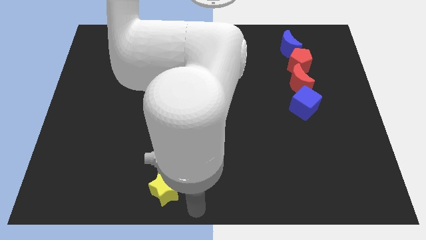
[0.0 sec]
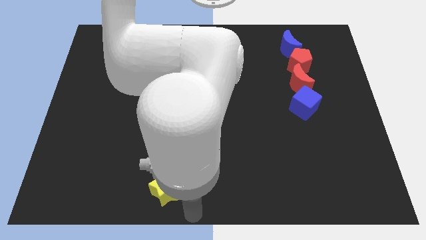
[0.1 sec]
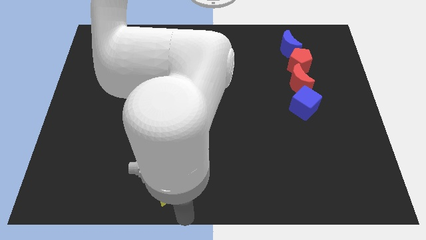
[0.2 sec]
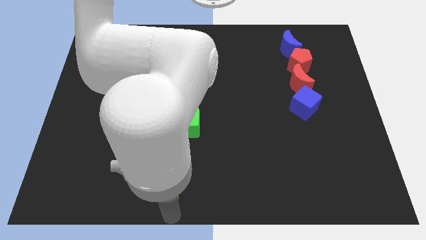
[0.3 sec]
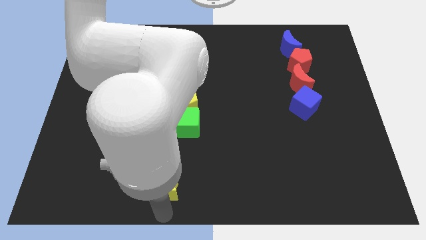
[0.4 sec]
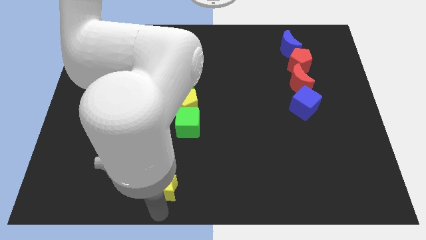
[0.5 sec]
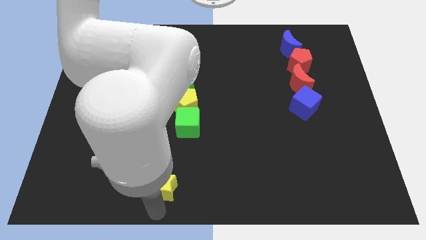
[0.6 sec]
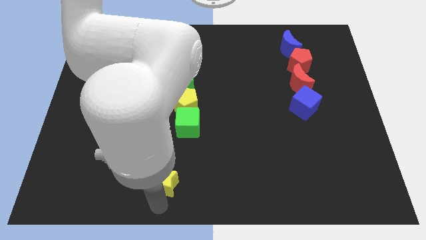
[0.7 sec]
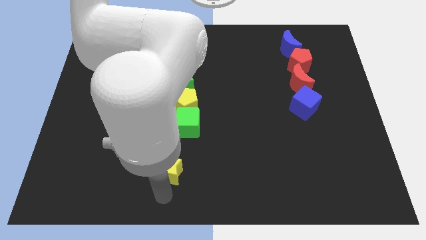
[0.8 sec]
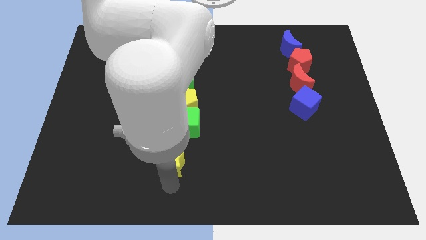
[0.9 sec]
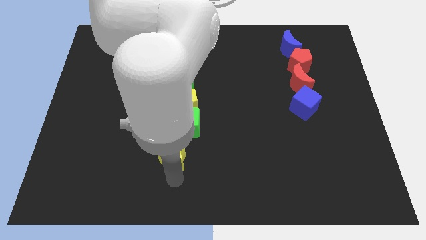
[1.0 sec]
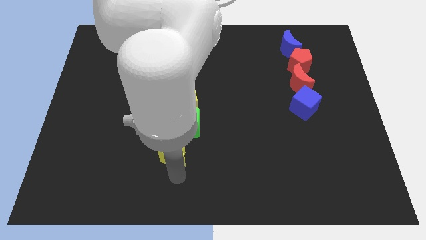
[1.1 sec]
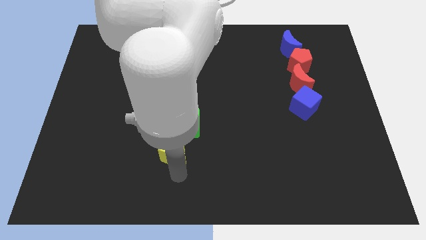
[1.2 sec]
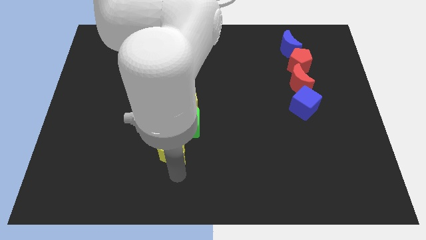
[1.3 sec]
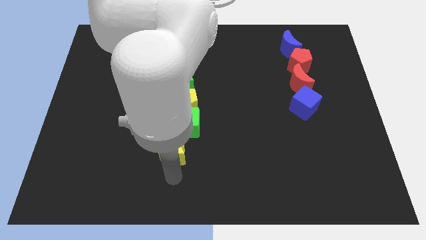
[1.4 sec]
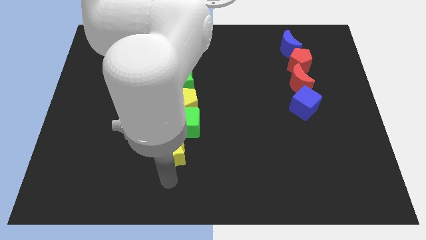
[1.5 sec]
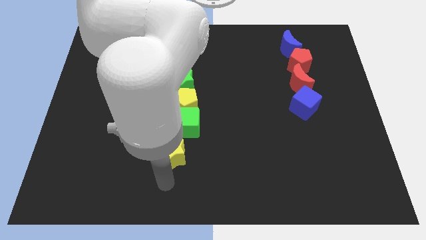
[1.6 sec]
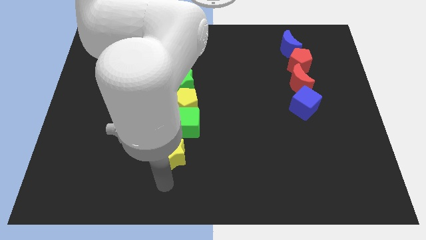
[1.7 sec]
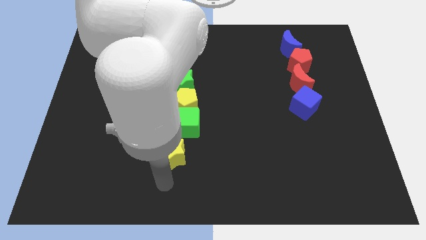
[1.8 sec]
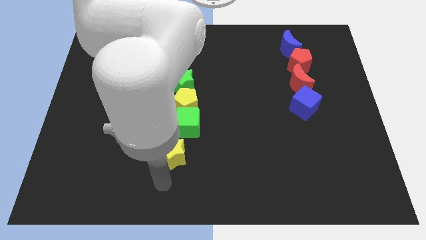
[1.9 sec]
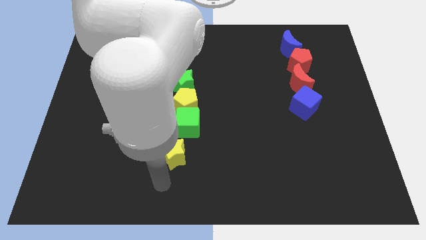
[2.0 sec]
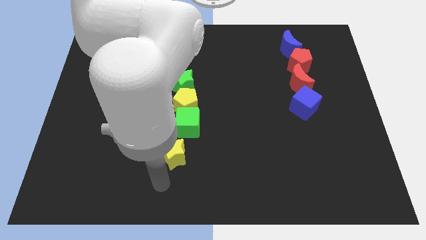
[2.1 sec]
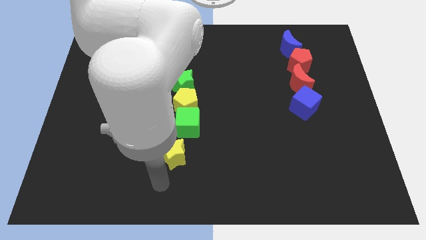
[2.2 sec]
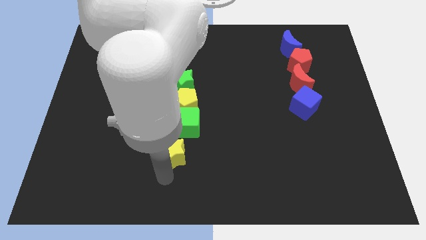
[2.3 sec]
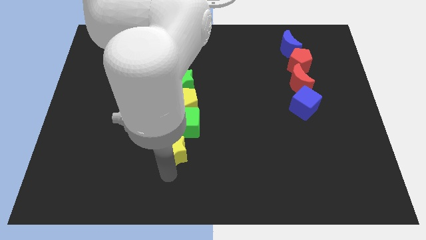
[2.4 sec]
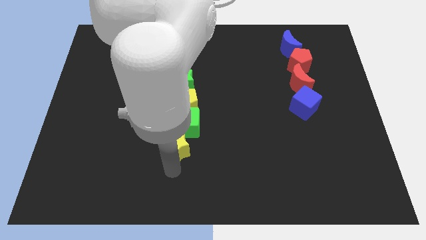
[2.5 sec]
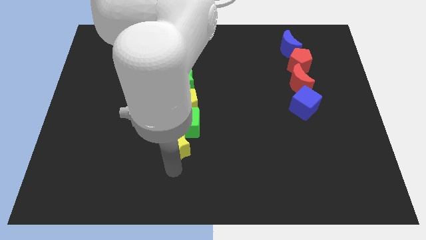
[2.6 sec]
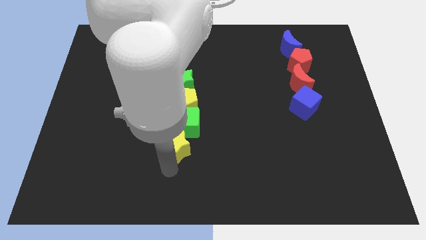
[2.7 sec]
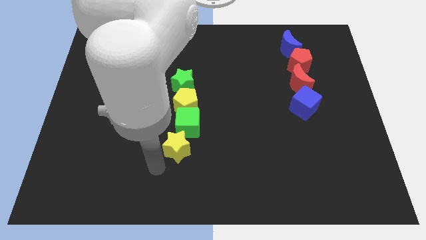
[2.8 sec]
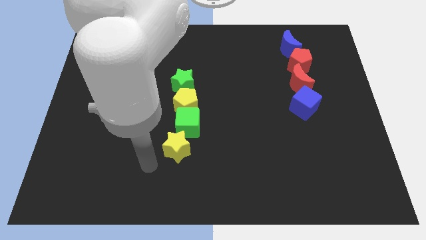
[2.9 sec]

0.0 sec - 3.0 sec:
place the yellow star to the bottom of the green cube

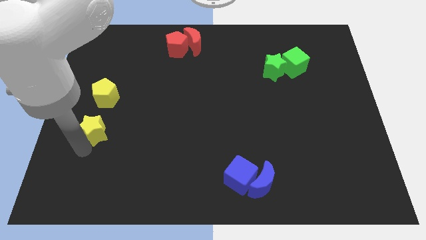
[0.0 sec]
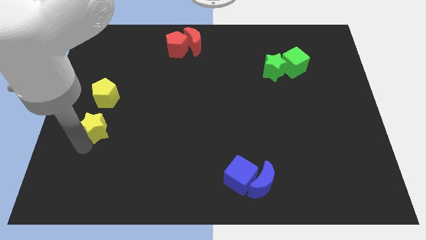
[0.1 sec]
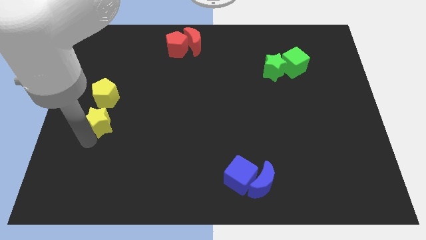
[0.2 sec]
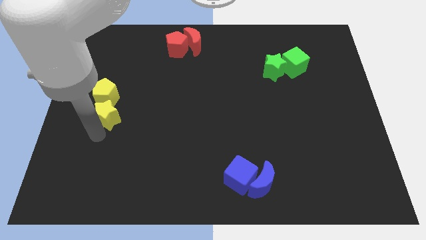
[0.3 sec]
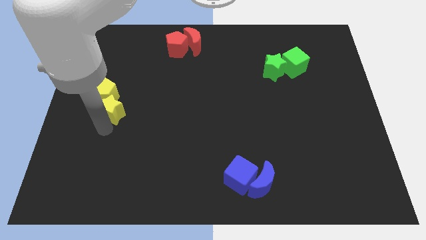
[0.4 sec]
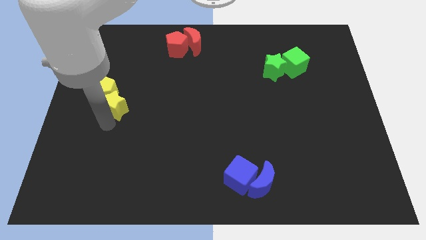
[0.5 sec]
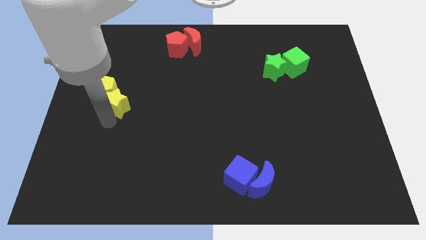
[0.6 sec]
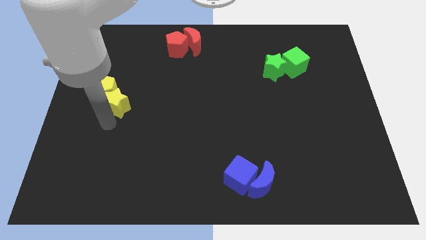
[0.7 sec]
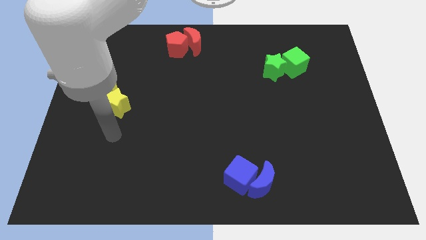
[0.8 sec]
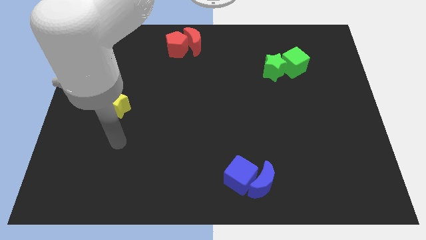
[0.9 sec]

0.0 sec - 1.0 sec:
push yellow star slightly upwards

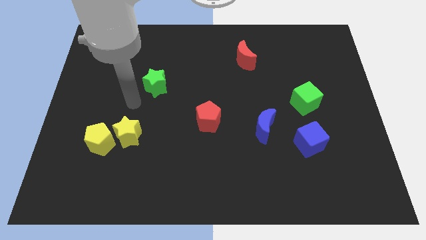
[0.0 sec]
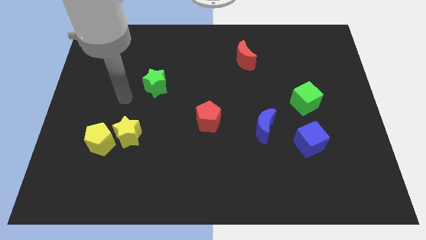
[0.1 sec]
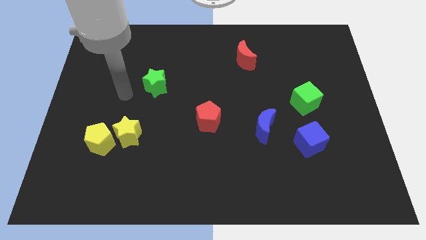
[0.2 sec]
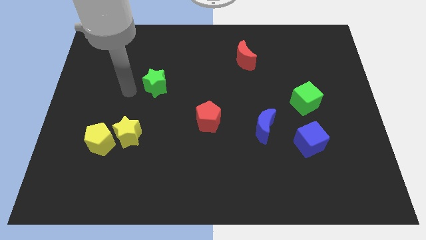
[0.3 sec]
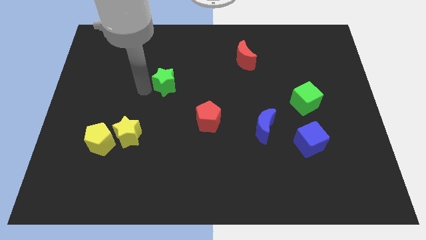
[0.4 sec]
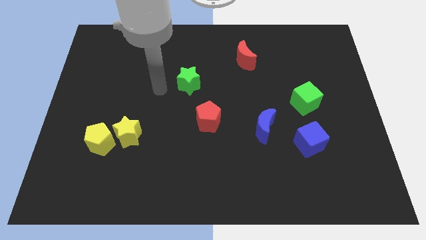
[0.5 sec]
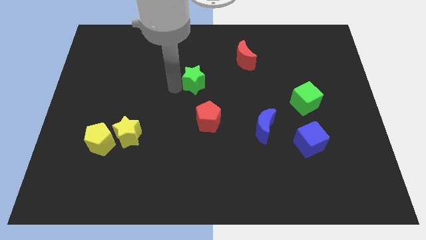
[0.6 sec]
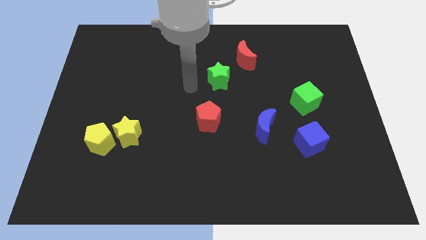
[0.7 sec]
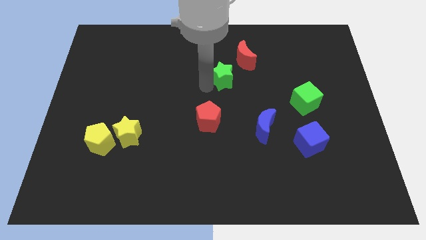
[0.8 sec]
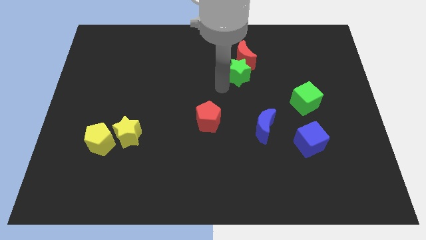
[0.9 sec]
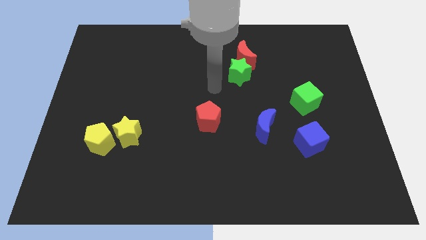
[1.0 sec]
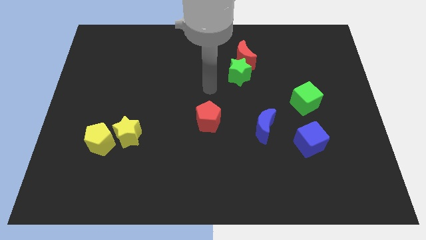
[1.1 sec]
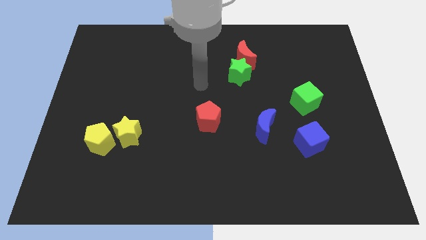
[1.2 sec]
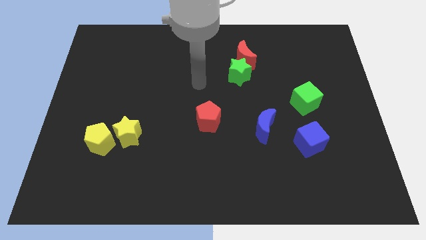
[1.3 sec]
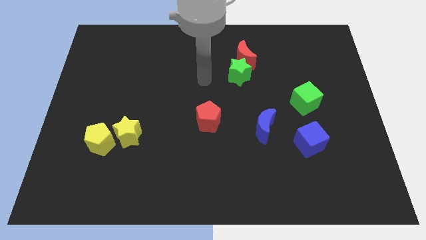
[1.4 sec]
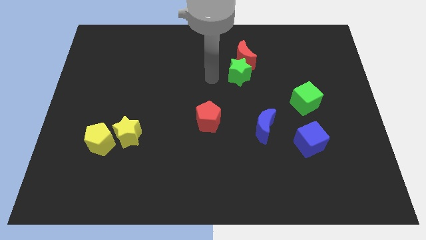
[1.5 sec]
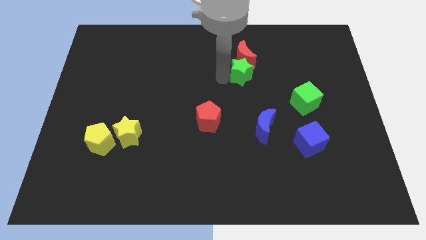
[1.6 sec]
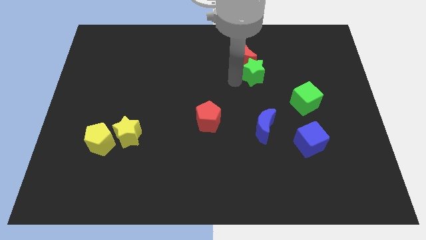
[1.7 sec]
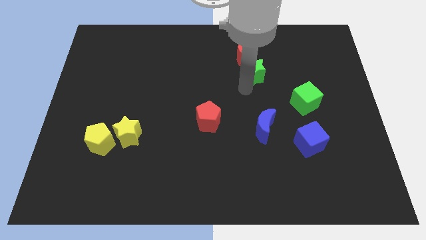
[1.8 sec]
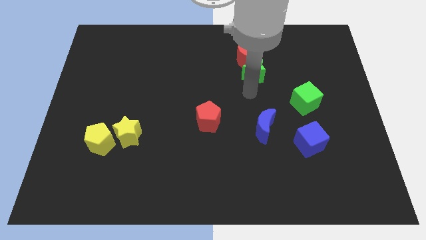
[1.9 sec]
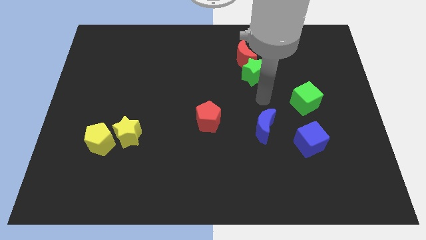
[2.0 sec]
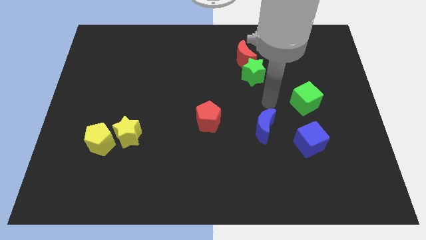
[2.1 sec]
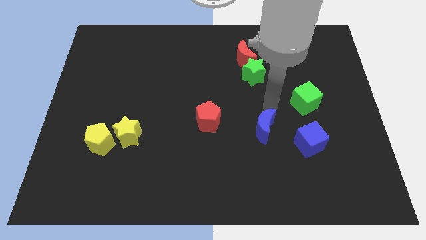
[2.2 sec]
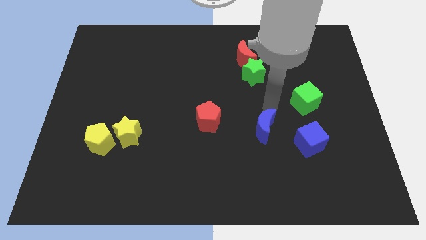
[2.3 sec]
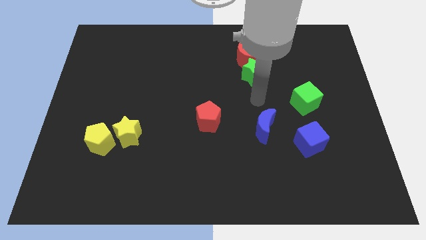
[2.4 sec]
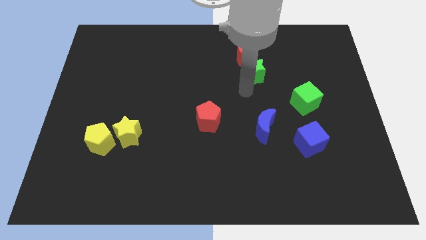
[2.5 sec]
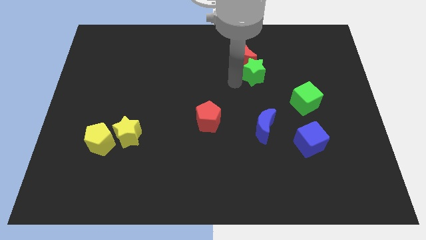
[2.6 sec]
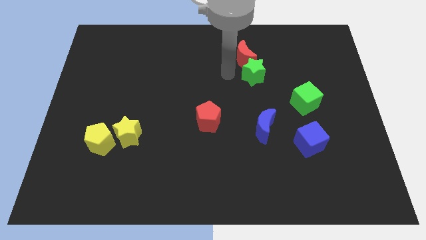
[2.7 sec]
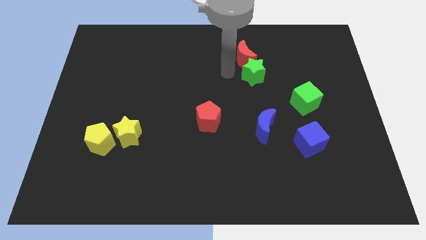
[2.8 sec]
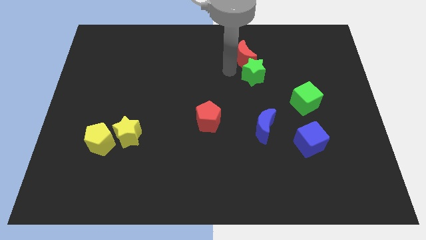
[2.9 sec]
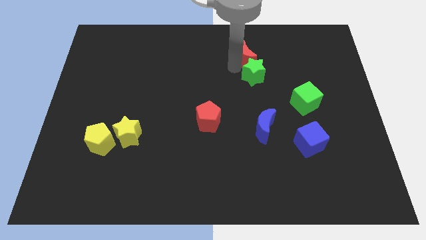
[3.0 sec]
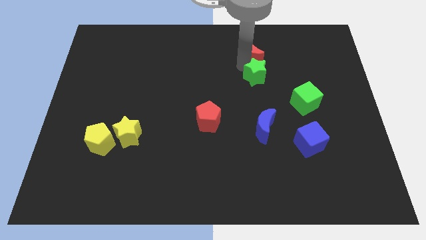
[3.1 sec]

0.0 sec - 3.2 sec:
move the green star to the bottom right side of the red crescent

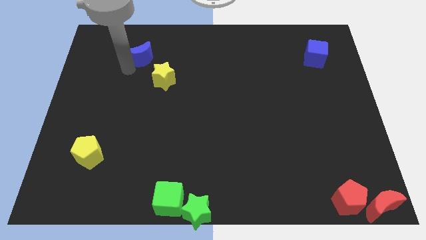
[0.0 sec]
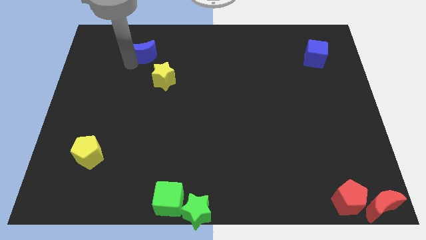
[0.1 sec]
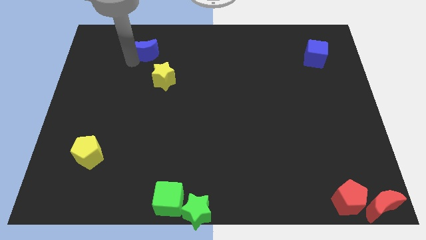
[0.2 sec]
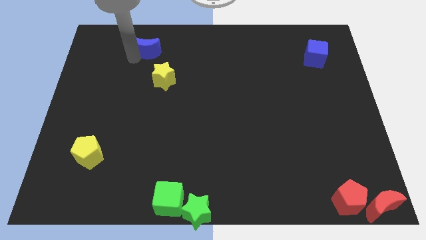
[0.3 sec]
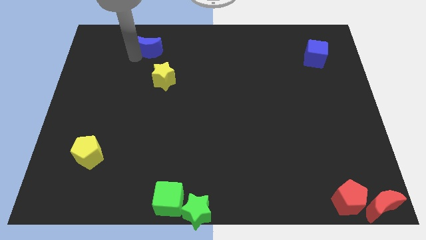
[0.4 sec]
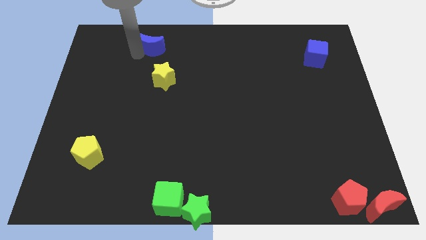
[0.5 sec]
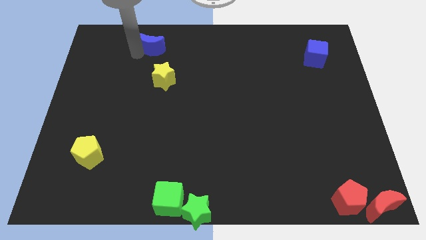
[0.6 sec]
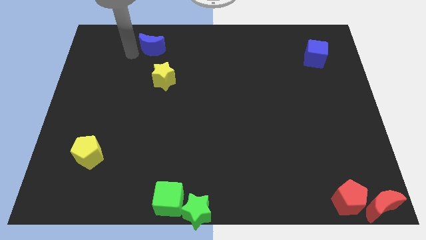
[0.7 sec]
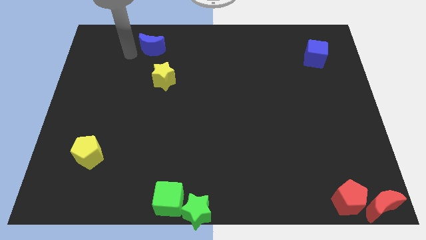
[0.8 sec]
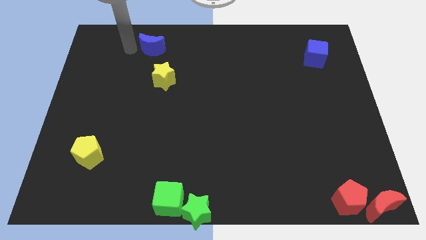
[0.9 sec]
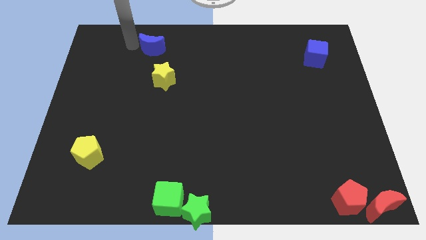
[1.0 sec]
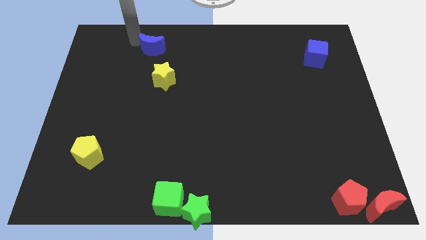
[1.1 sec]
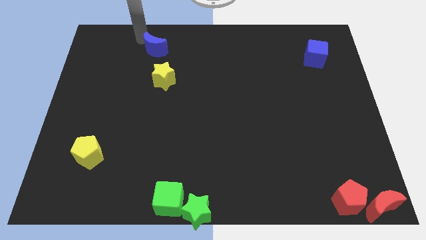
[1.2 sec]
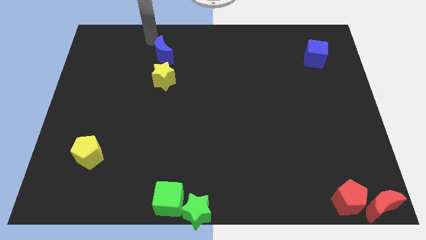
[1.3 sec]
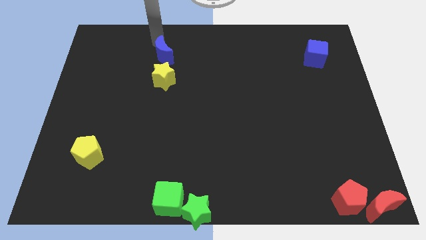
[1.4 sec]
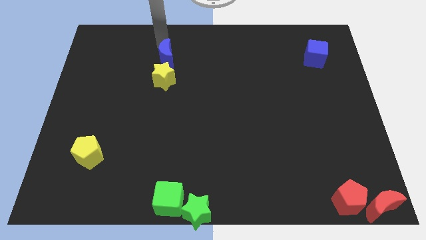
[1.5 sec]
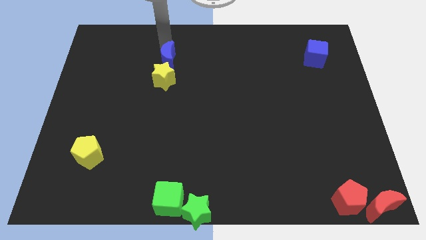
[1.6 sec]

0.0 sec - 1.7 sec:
slide the blue moon above the yellow star

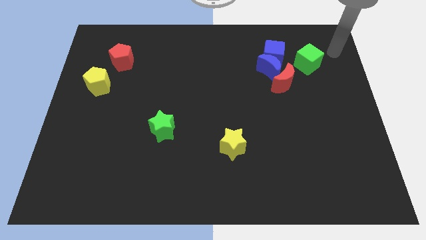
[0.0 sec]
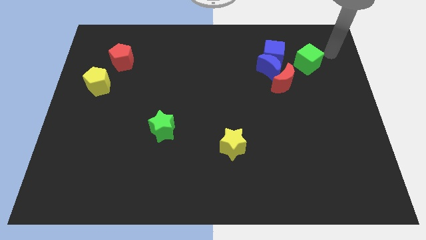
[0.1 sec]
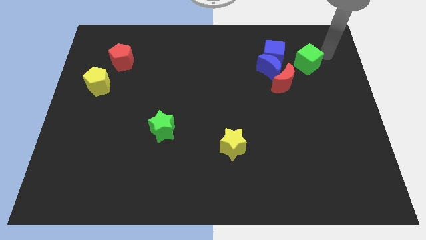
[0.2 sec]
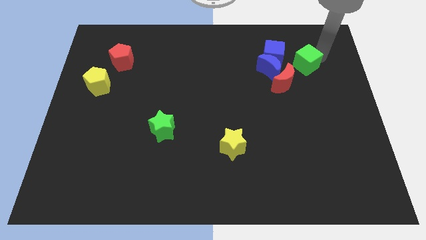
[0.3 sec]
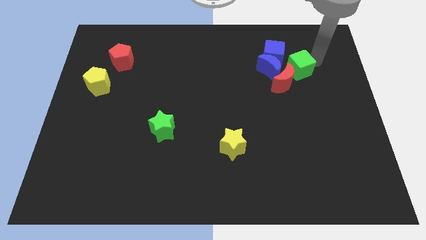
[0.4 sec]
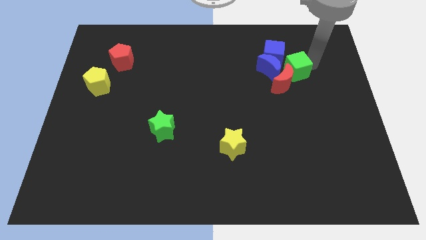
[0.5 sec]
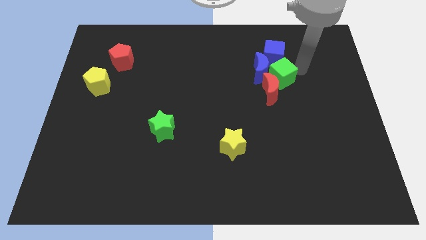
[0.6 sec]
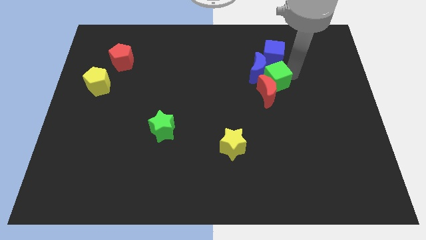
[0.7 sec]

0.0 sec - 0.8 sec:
push the green cube into the red crescent
